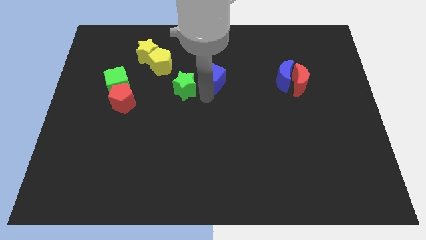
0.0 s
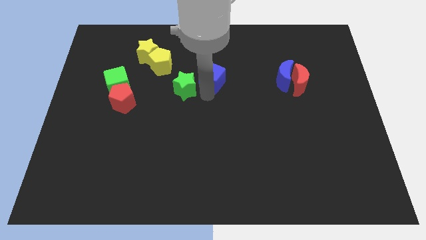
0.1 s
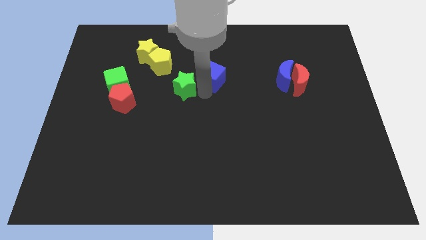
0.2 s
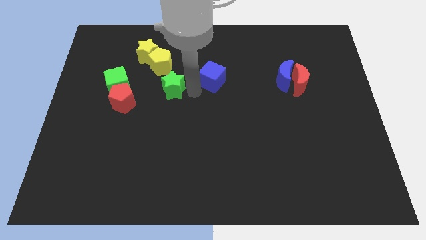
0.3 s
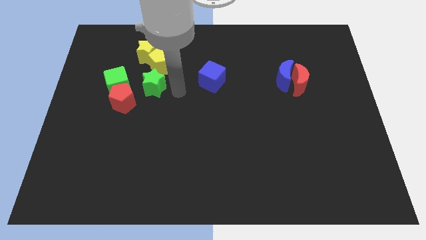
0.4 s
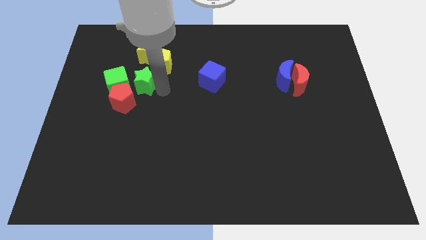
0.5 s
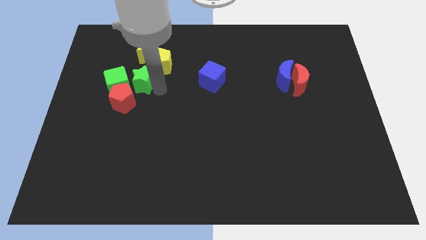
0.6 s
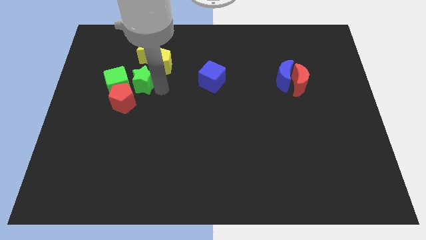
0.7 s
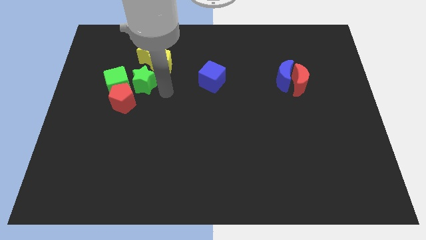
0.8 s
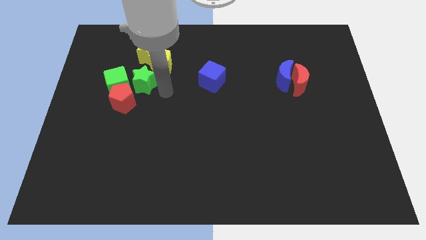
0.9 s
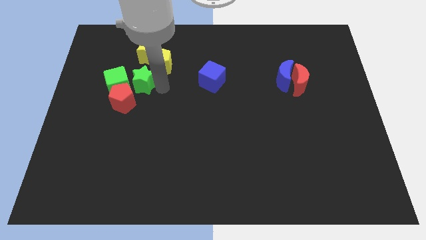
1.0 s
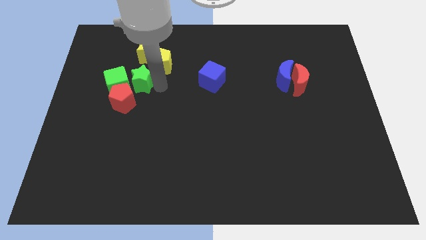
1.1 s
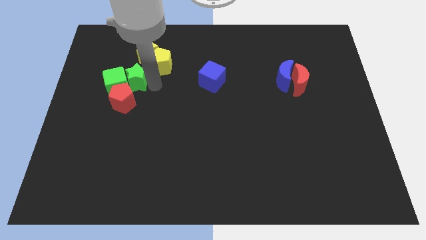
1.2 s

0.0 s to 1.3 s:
push the green star right to the green cube

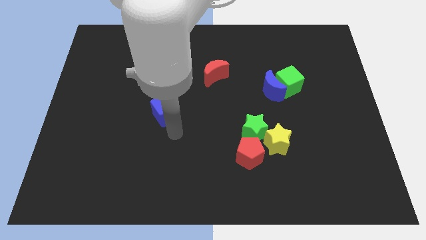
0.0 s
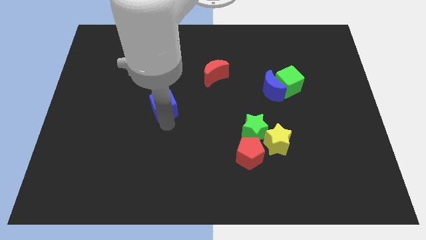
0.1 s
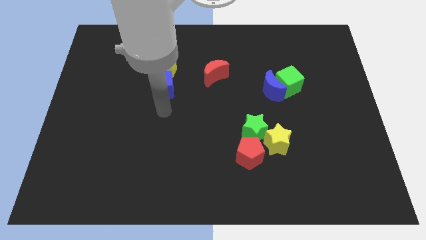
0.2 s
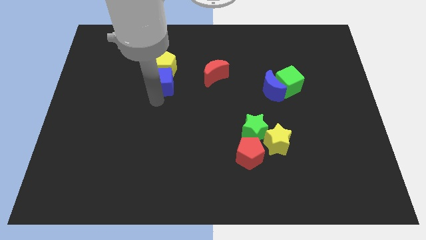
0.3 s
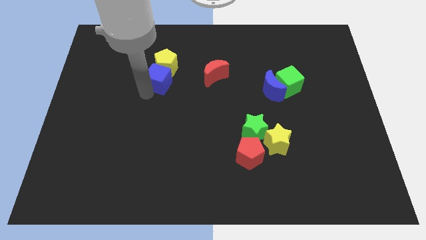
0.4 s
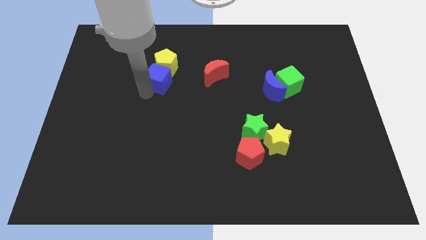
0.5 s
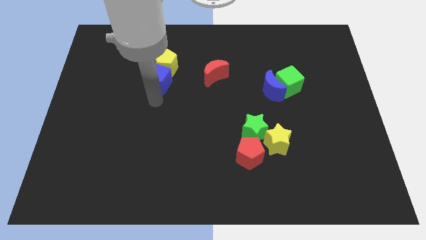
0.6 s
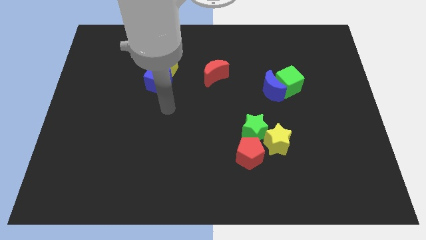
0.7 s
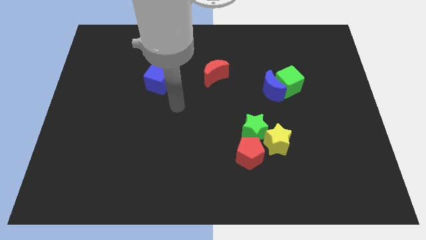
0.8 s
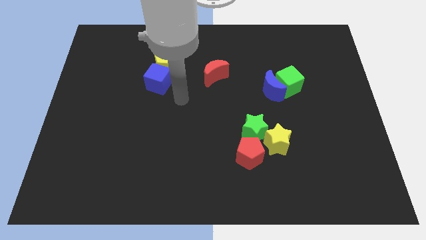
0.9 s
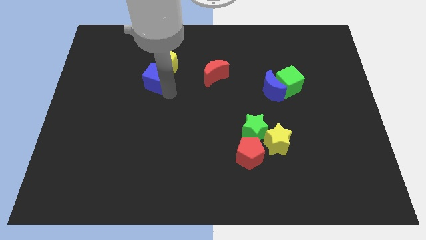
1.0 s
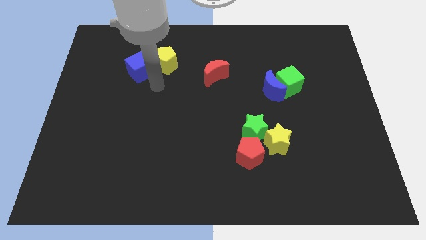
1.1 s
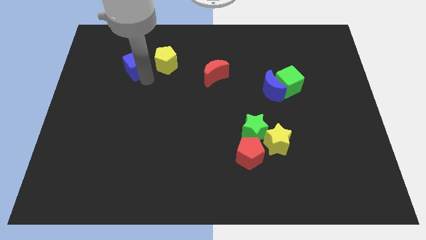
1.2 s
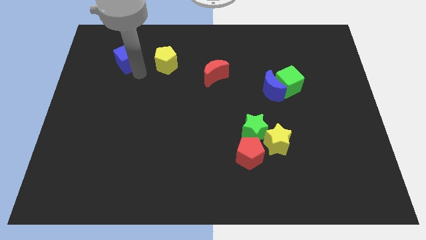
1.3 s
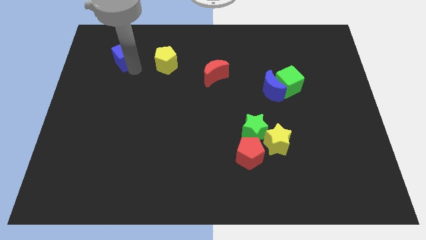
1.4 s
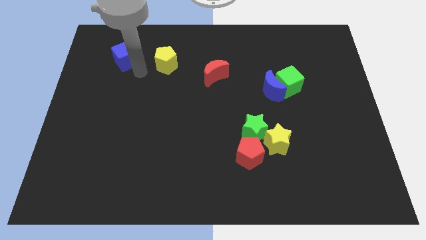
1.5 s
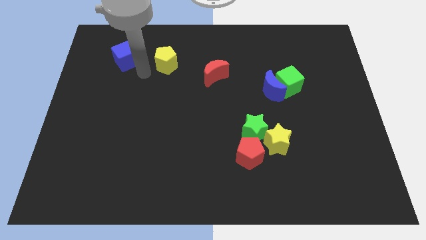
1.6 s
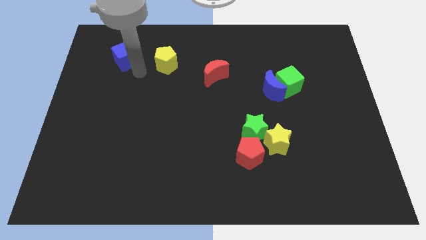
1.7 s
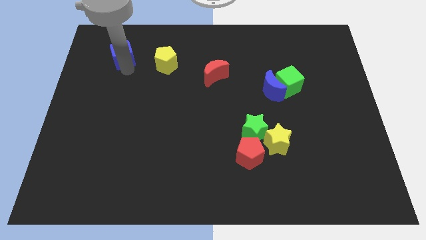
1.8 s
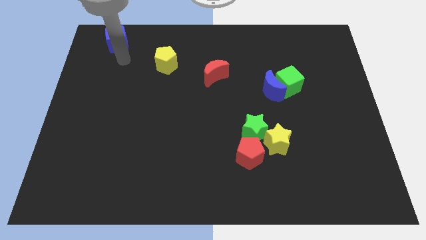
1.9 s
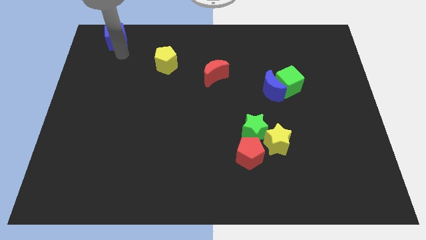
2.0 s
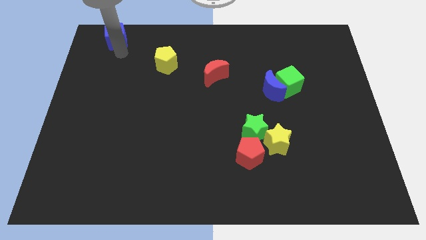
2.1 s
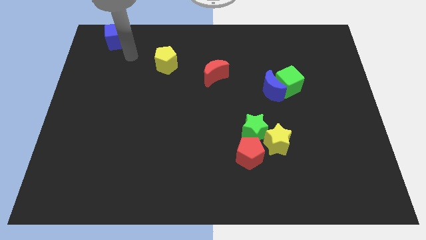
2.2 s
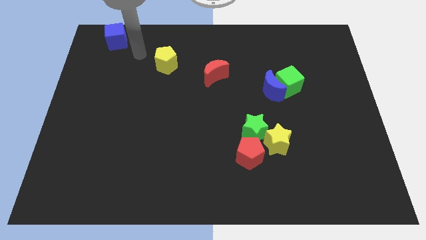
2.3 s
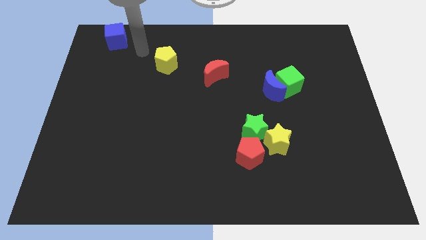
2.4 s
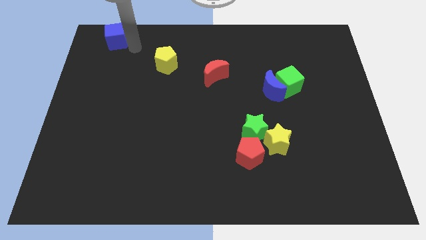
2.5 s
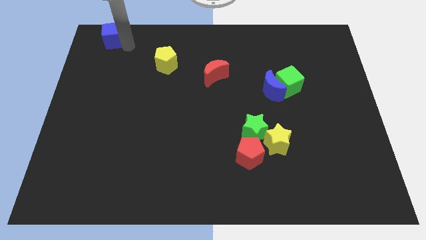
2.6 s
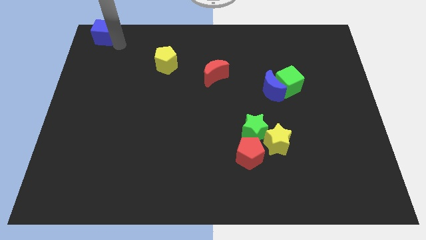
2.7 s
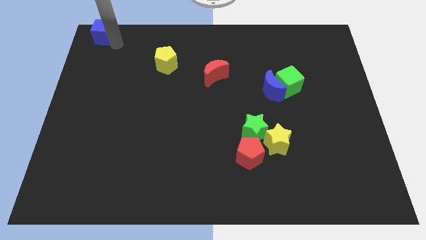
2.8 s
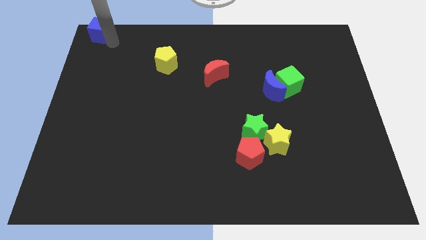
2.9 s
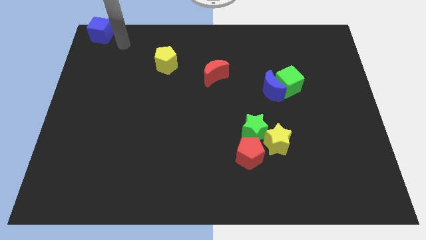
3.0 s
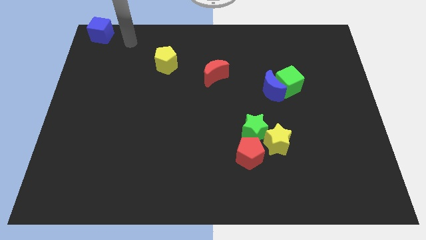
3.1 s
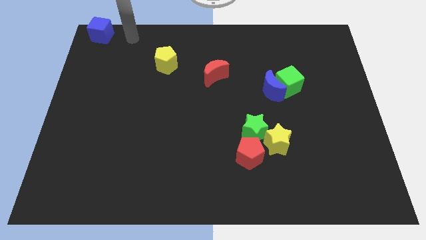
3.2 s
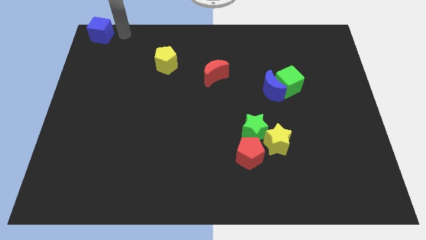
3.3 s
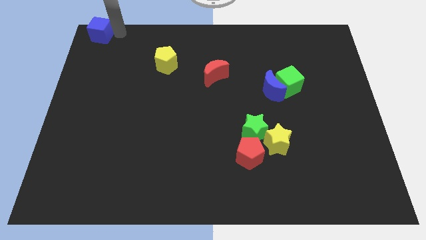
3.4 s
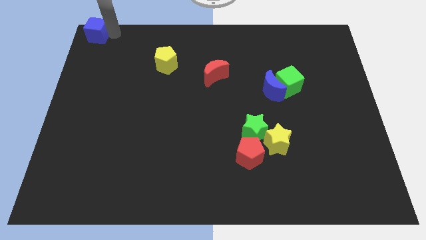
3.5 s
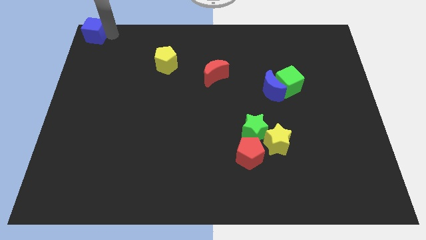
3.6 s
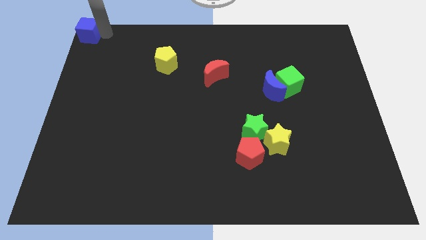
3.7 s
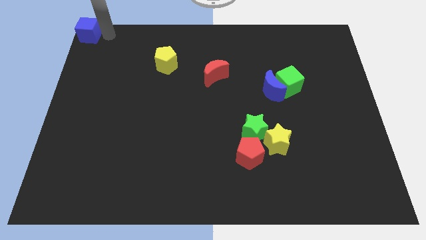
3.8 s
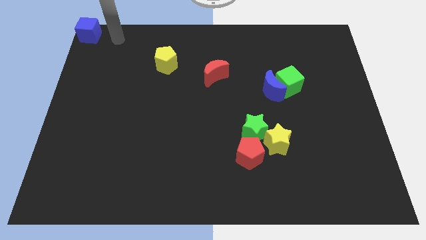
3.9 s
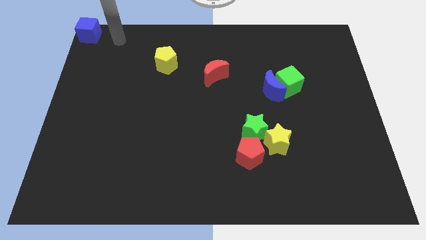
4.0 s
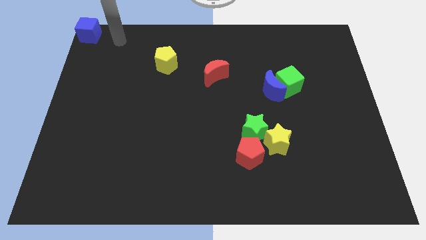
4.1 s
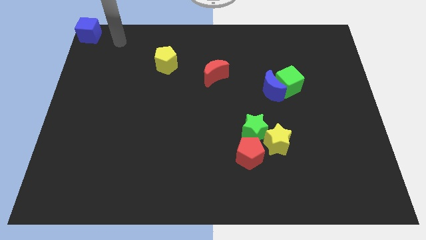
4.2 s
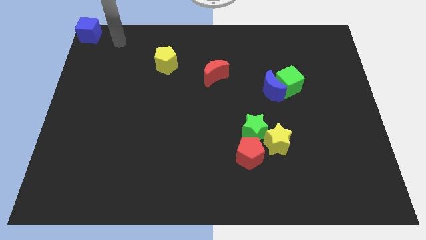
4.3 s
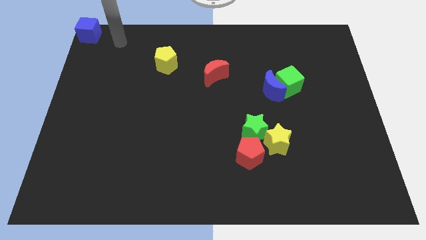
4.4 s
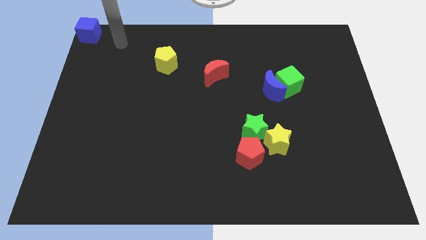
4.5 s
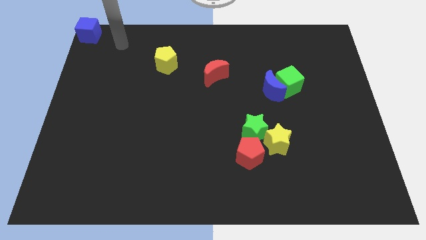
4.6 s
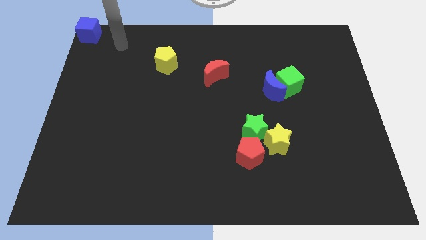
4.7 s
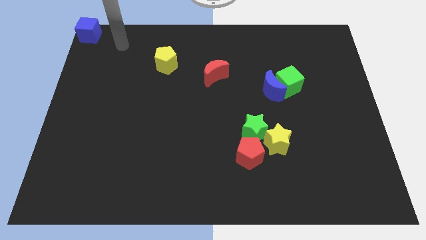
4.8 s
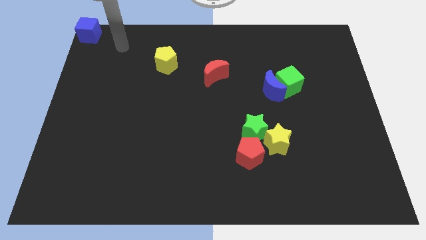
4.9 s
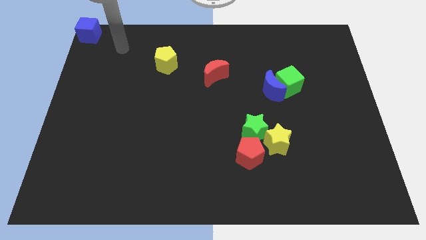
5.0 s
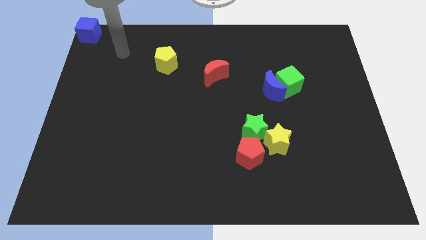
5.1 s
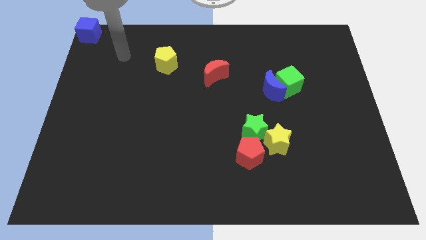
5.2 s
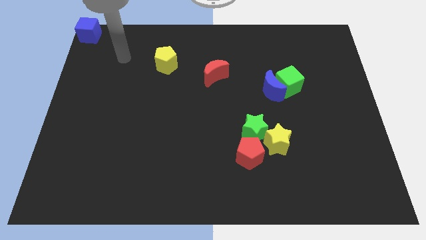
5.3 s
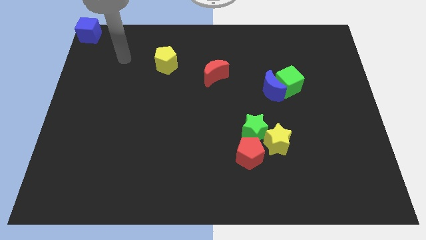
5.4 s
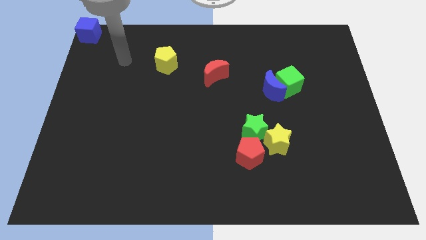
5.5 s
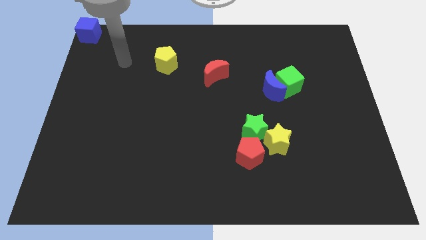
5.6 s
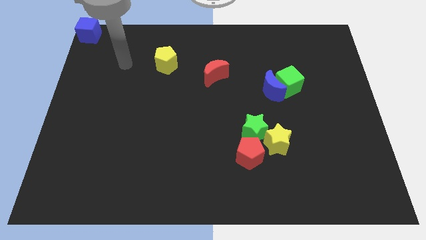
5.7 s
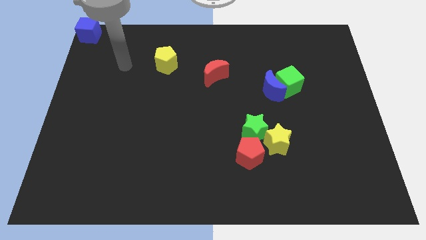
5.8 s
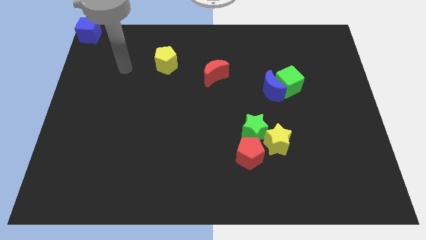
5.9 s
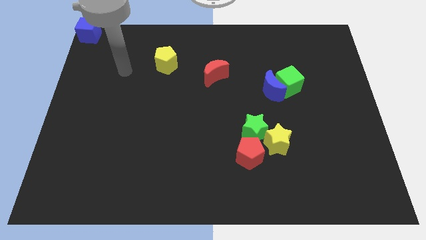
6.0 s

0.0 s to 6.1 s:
move the blue cube to the top left corner of the board

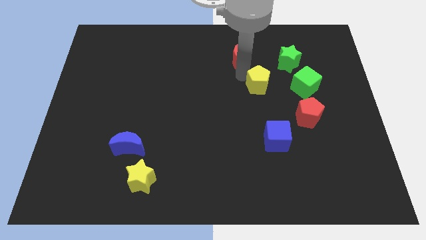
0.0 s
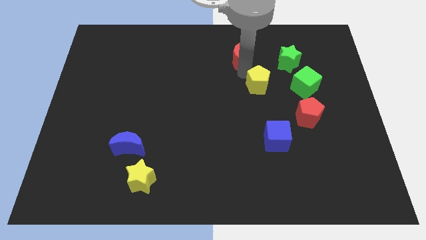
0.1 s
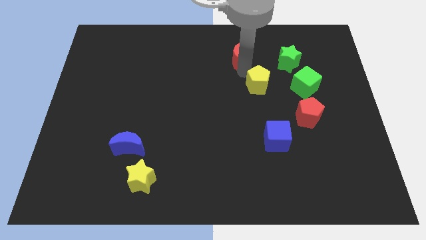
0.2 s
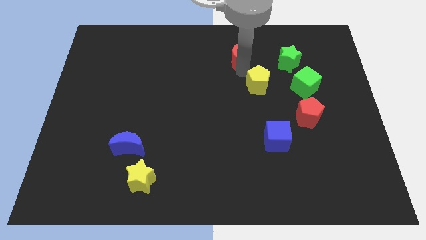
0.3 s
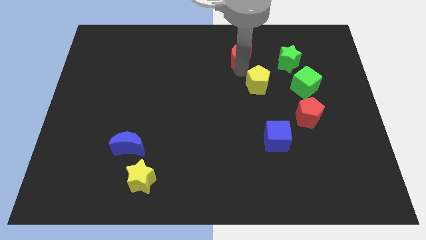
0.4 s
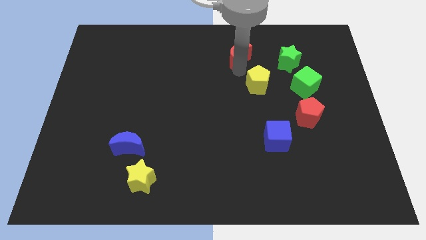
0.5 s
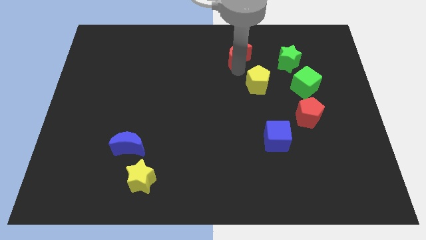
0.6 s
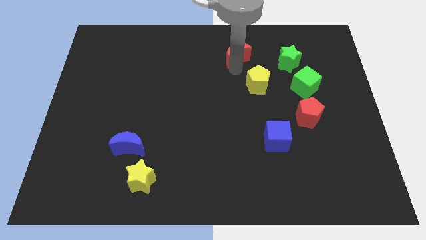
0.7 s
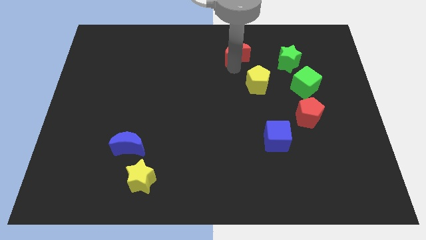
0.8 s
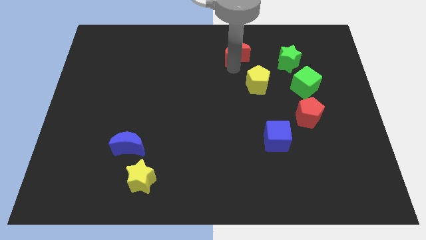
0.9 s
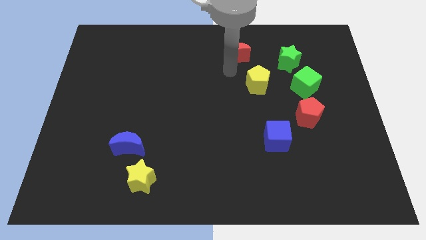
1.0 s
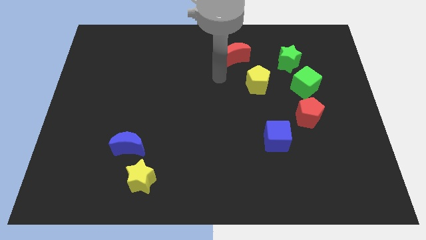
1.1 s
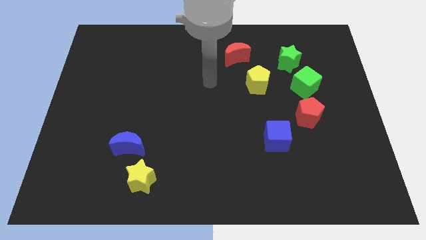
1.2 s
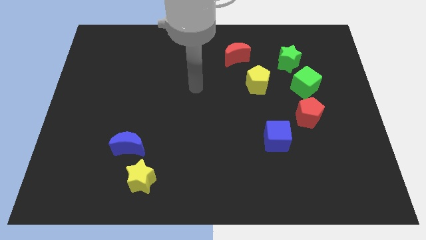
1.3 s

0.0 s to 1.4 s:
slightly move the red crescent to the top center of the board
